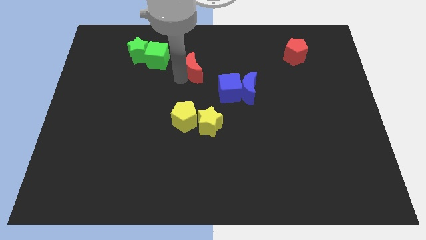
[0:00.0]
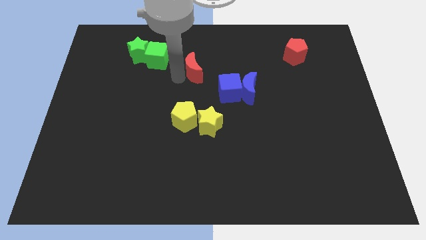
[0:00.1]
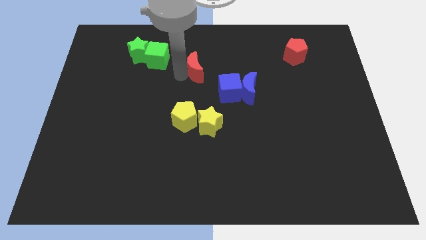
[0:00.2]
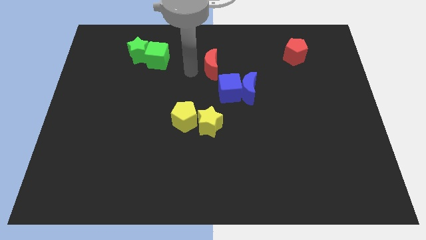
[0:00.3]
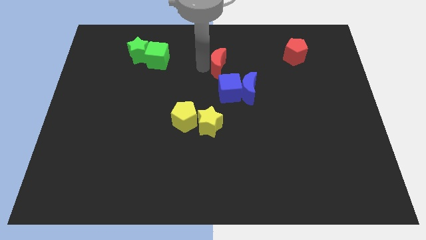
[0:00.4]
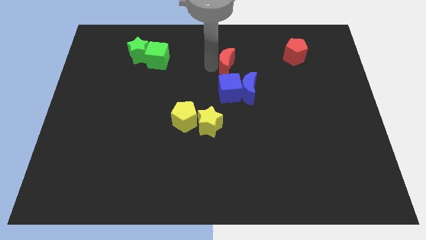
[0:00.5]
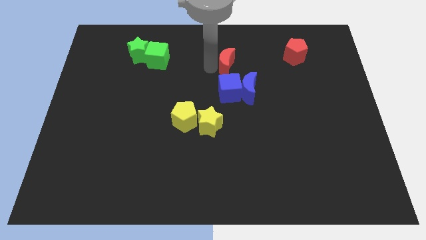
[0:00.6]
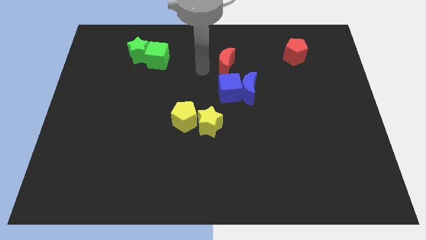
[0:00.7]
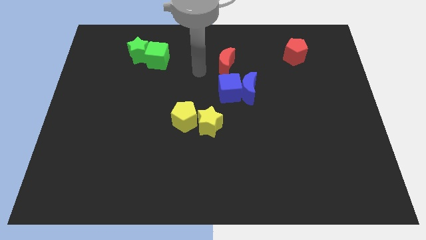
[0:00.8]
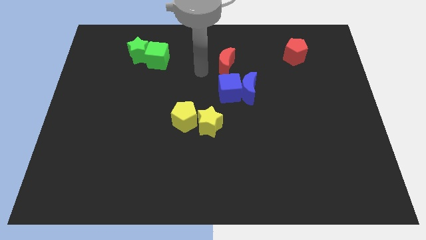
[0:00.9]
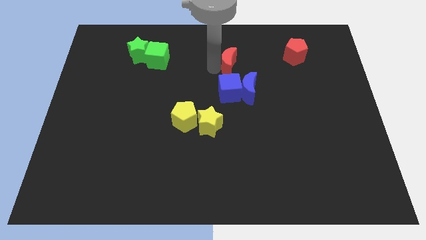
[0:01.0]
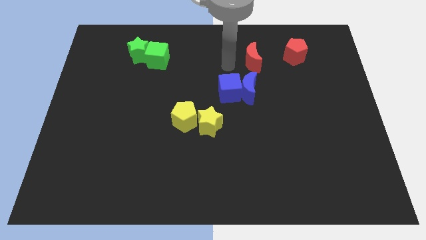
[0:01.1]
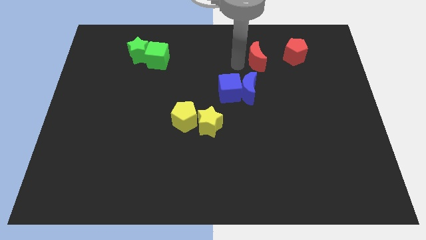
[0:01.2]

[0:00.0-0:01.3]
push the red moon towards the red pentagon

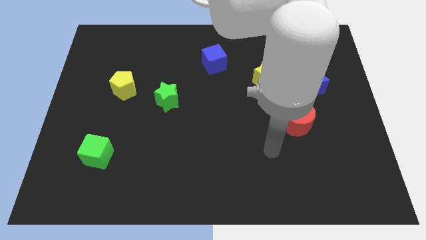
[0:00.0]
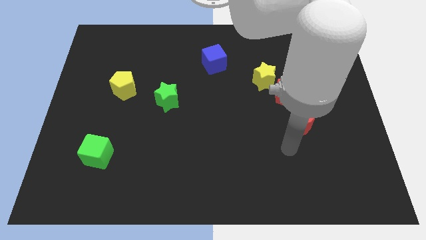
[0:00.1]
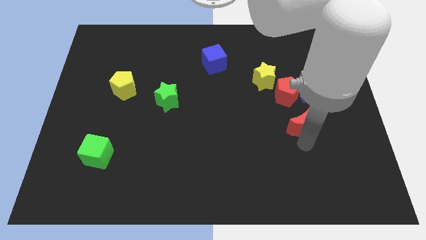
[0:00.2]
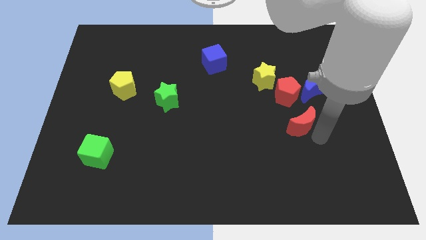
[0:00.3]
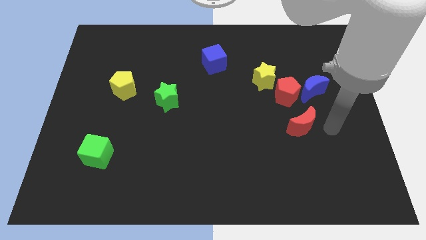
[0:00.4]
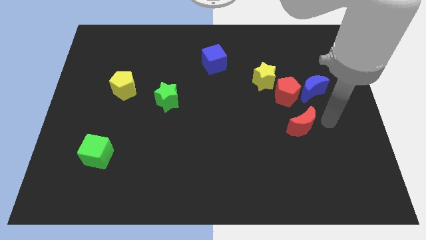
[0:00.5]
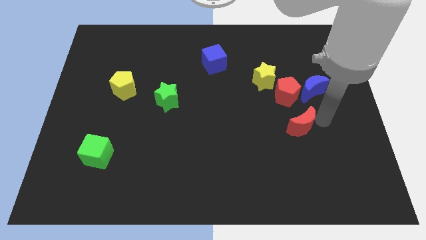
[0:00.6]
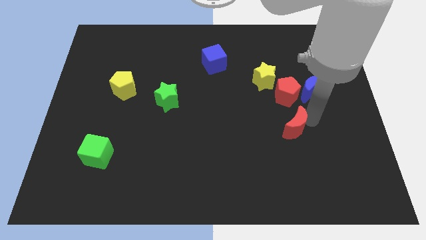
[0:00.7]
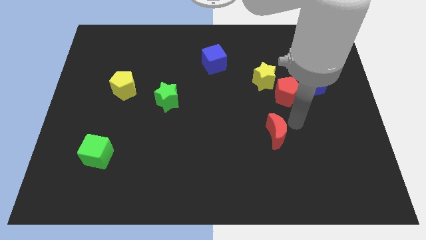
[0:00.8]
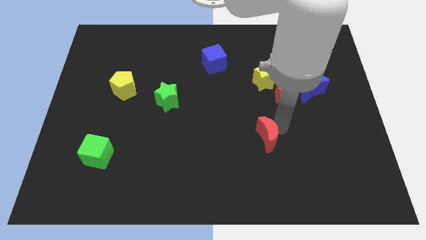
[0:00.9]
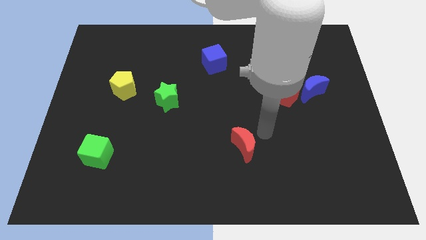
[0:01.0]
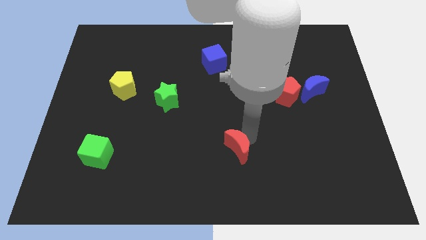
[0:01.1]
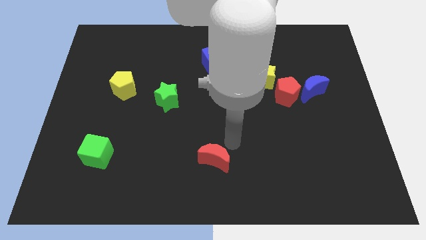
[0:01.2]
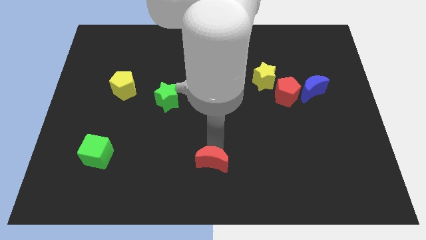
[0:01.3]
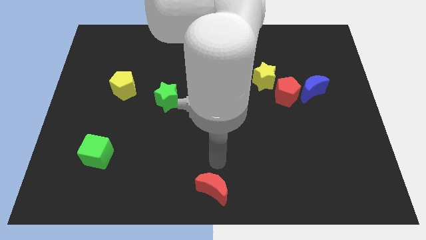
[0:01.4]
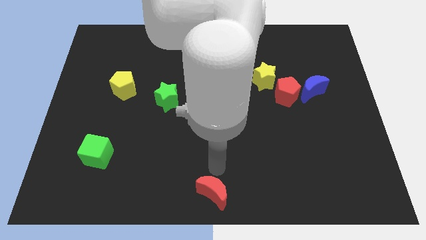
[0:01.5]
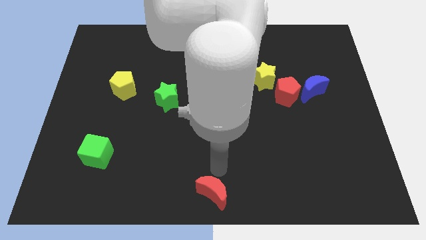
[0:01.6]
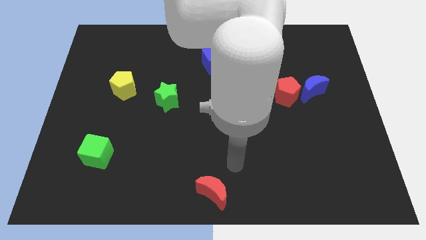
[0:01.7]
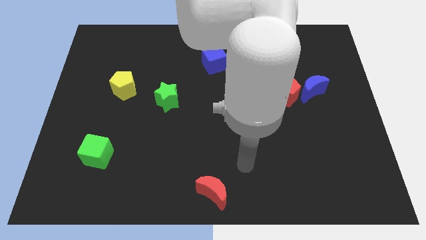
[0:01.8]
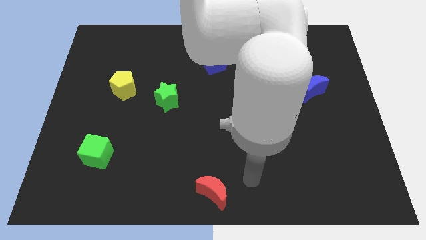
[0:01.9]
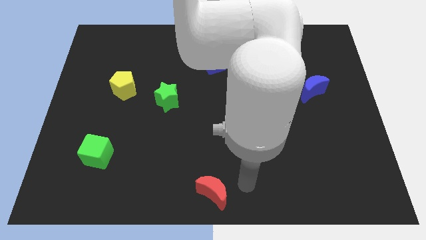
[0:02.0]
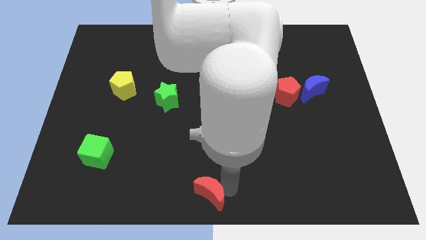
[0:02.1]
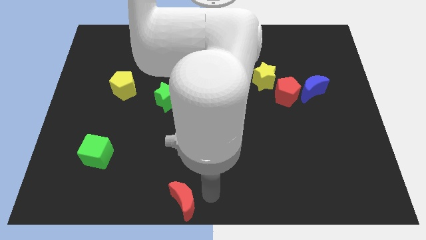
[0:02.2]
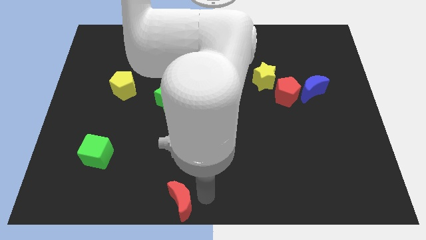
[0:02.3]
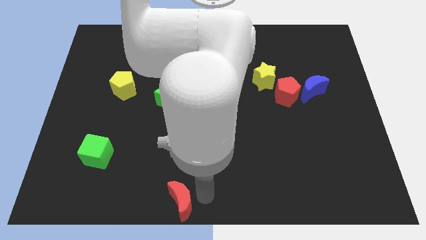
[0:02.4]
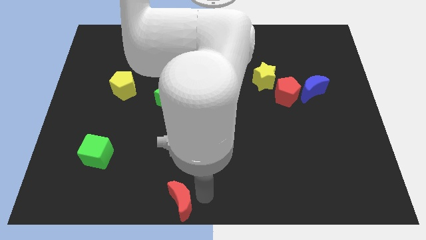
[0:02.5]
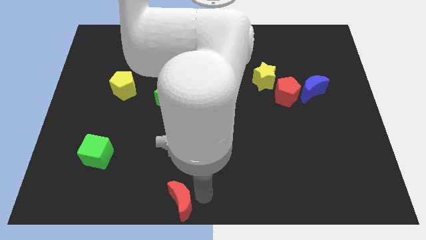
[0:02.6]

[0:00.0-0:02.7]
push the red moon downward

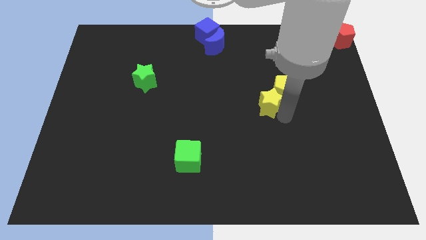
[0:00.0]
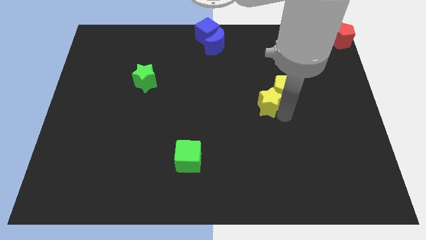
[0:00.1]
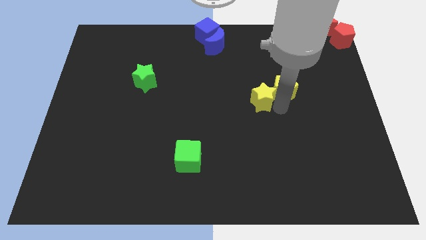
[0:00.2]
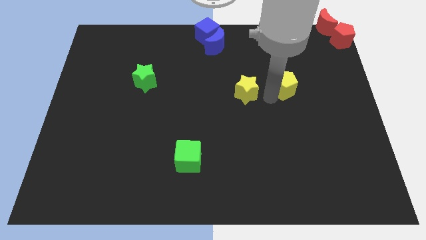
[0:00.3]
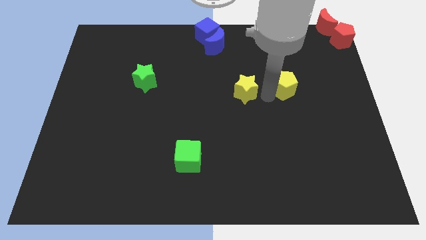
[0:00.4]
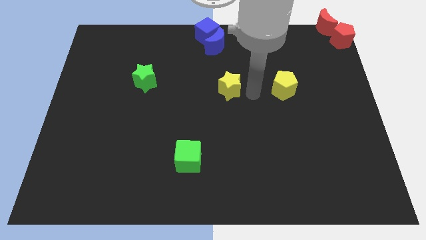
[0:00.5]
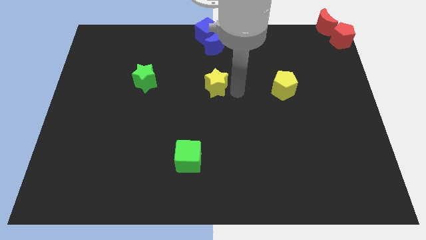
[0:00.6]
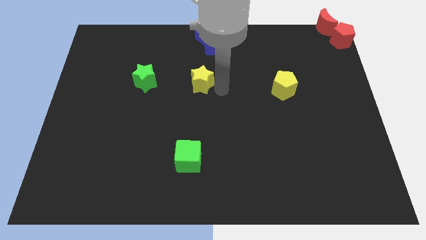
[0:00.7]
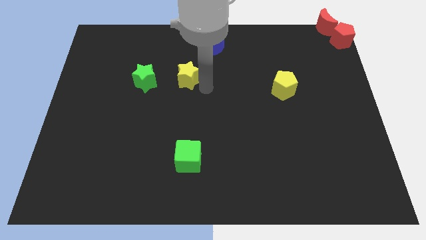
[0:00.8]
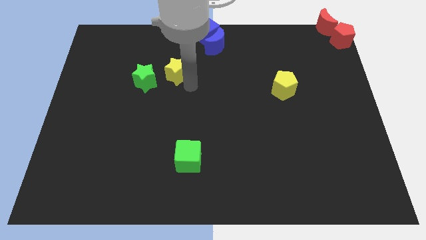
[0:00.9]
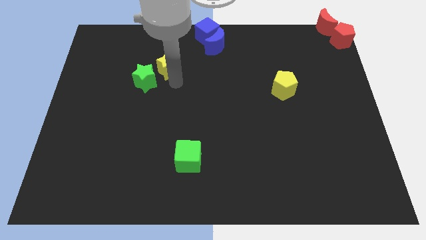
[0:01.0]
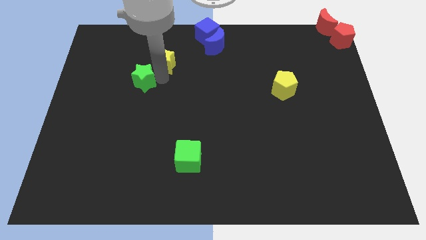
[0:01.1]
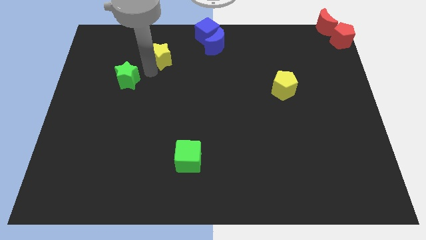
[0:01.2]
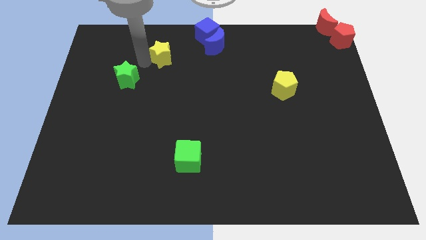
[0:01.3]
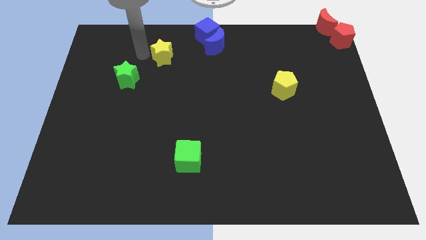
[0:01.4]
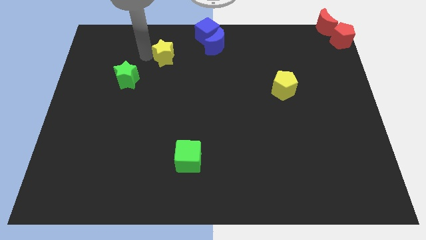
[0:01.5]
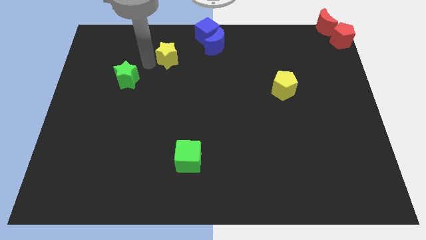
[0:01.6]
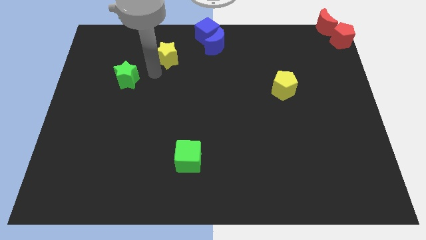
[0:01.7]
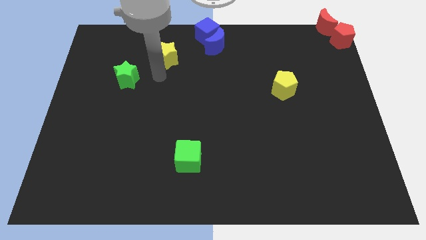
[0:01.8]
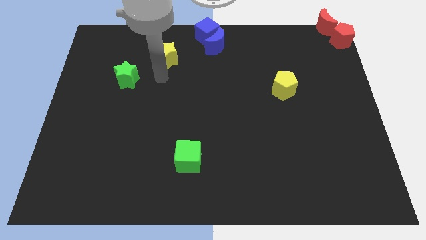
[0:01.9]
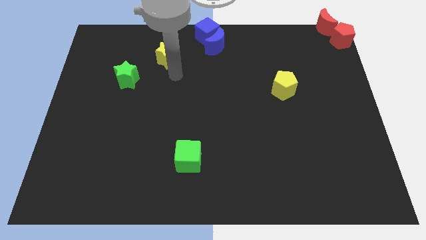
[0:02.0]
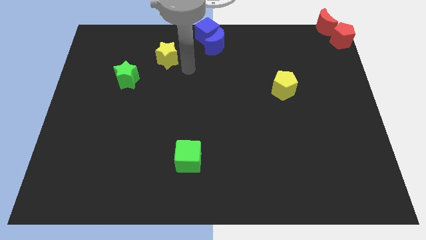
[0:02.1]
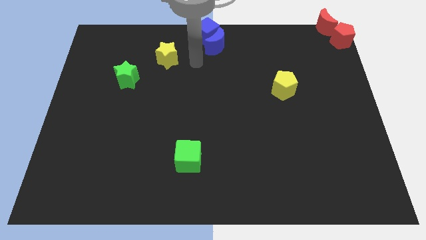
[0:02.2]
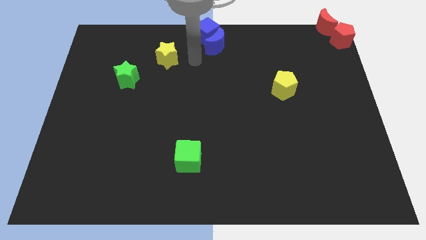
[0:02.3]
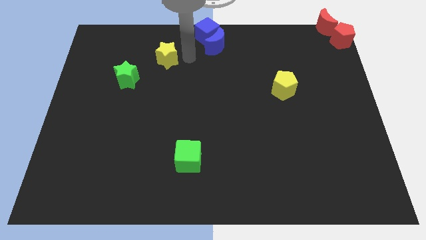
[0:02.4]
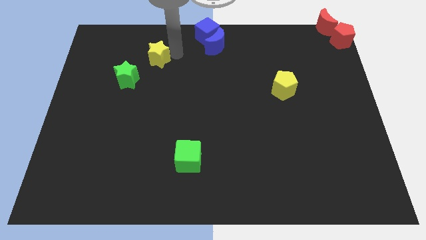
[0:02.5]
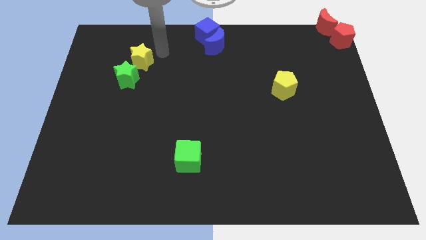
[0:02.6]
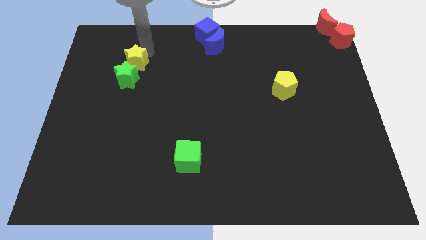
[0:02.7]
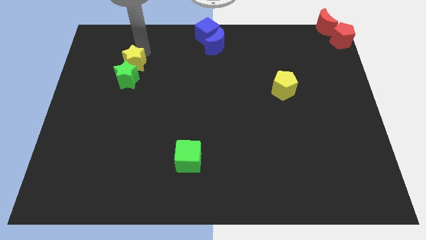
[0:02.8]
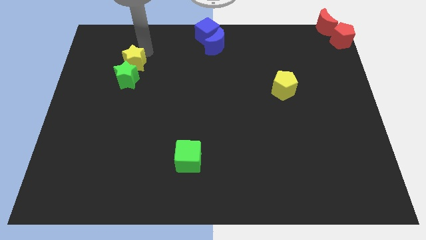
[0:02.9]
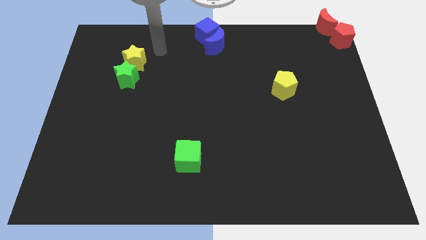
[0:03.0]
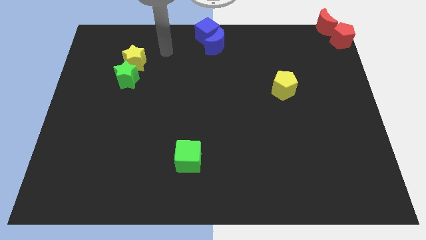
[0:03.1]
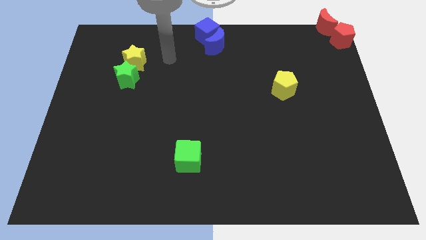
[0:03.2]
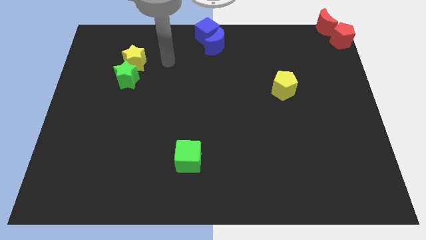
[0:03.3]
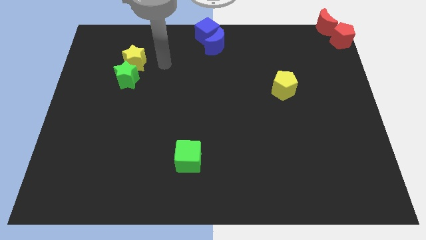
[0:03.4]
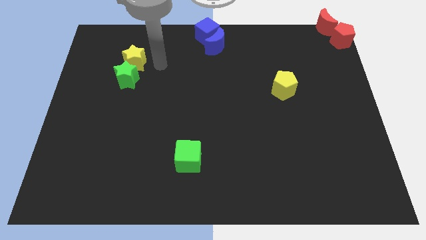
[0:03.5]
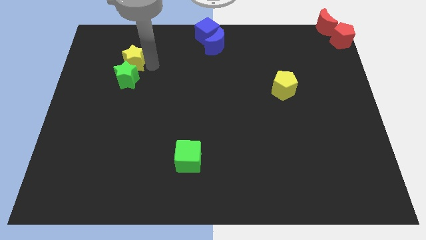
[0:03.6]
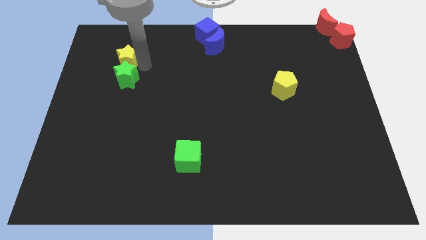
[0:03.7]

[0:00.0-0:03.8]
move the yellow star to the top of the green star

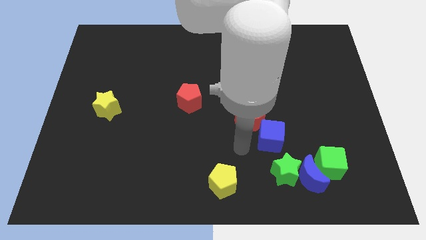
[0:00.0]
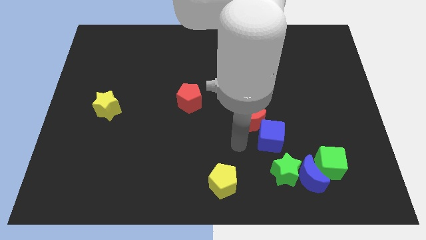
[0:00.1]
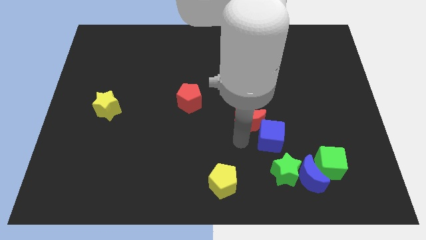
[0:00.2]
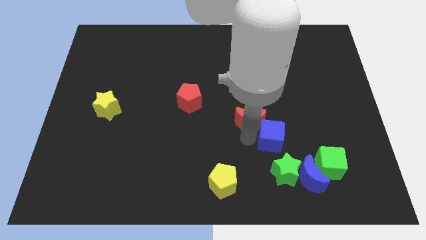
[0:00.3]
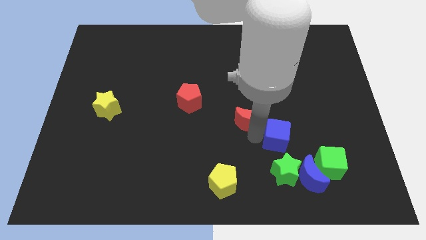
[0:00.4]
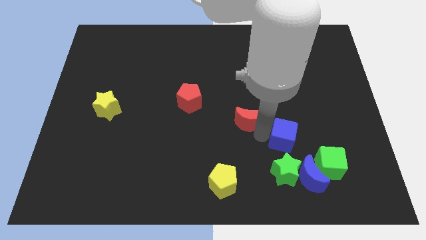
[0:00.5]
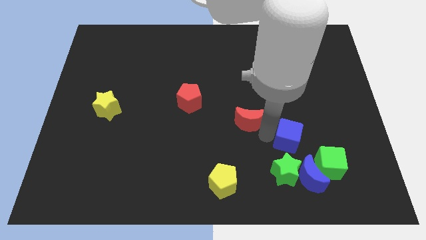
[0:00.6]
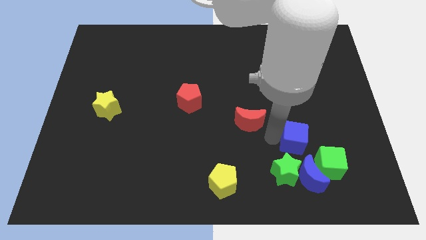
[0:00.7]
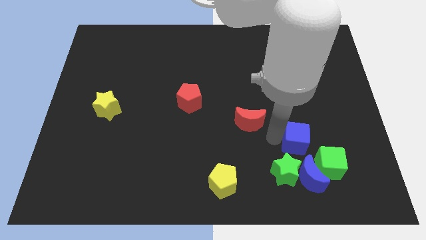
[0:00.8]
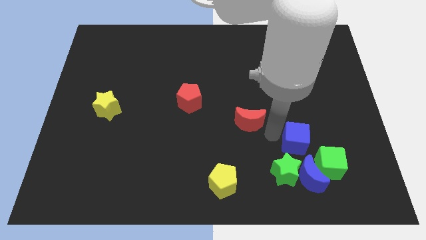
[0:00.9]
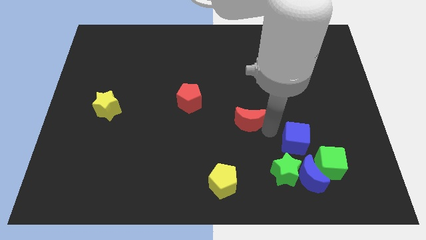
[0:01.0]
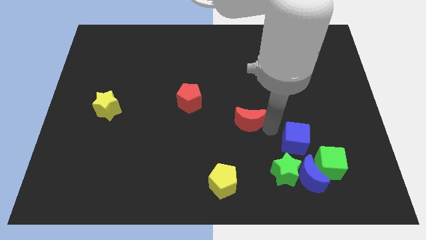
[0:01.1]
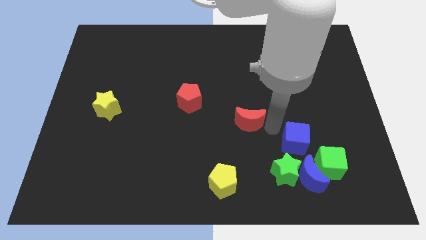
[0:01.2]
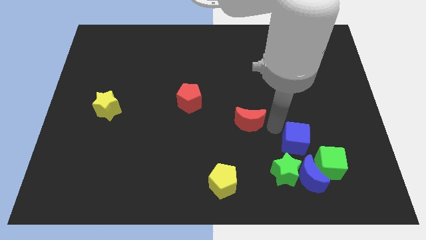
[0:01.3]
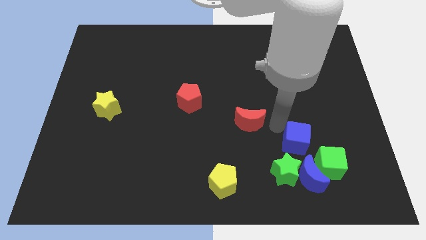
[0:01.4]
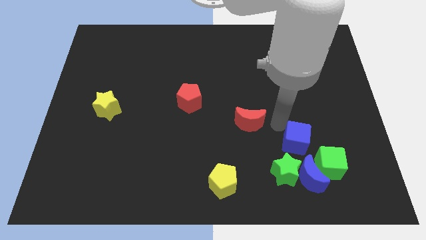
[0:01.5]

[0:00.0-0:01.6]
place blue cube to the top of blue moon
